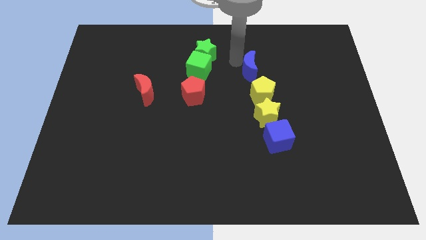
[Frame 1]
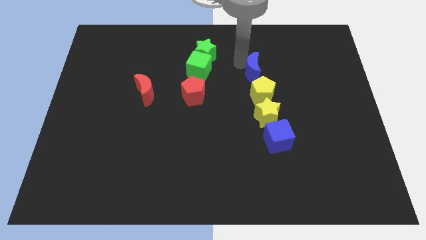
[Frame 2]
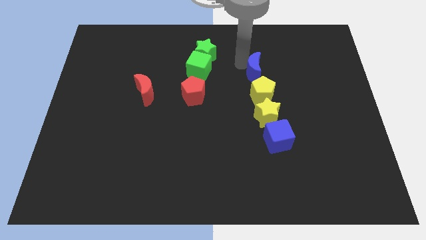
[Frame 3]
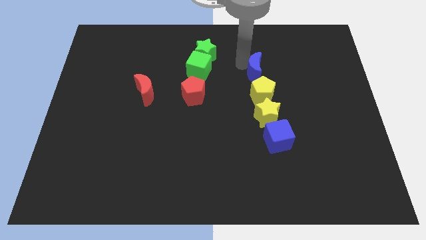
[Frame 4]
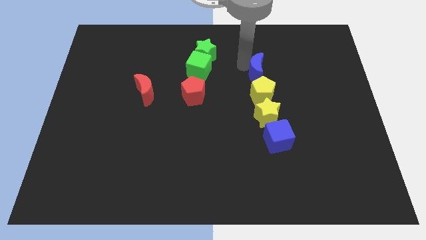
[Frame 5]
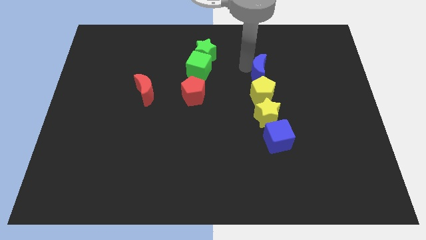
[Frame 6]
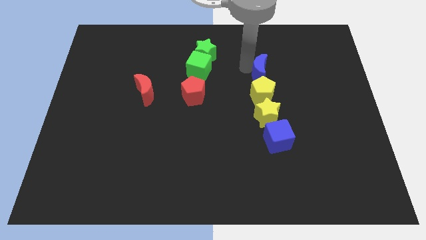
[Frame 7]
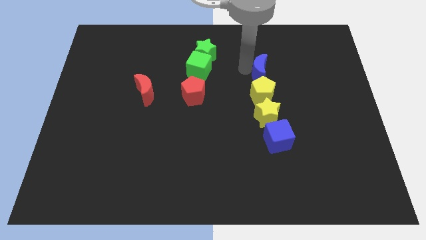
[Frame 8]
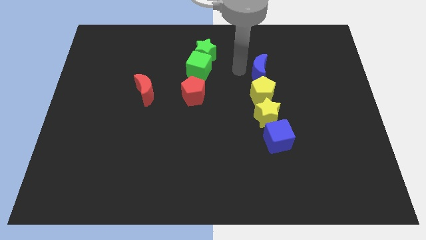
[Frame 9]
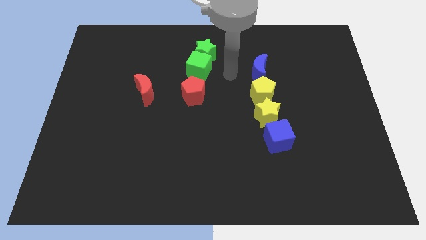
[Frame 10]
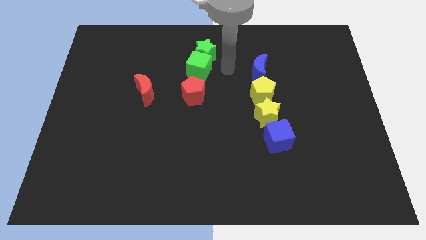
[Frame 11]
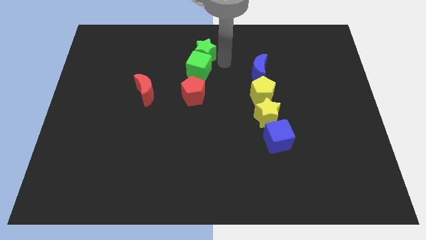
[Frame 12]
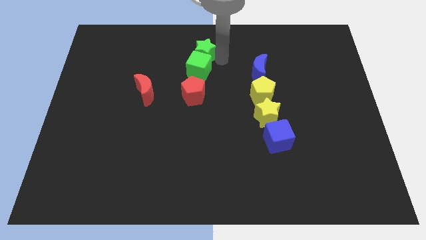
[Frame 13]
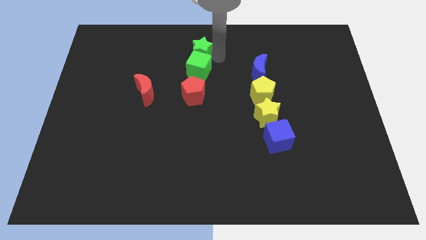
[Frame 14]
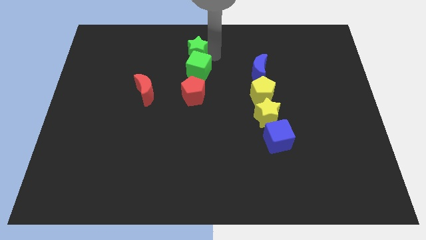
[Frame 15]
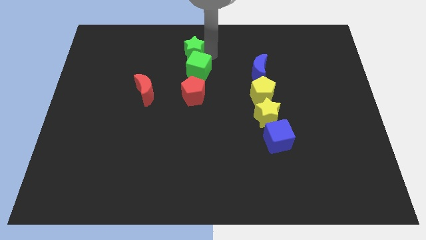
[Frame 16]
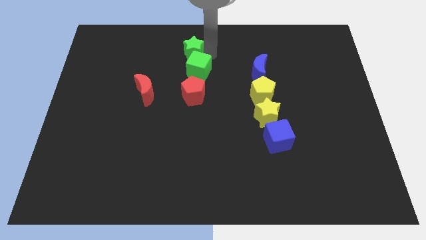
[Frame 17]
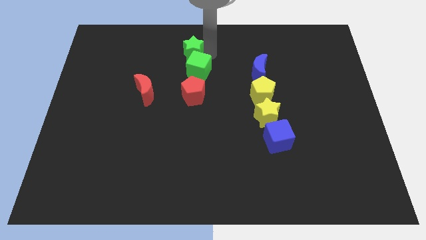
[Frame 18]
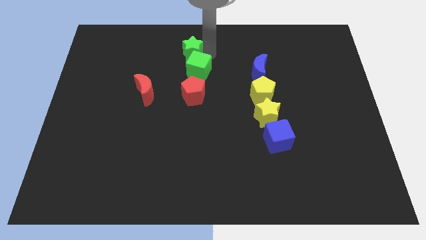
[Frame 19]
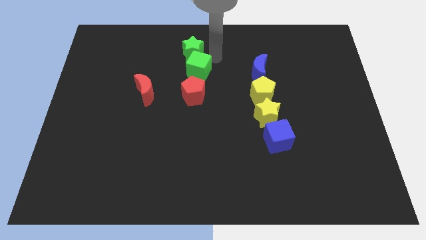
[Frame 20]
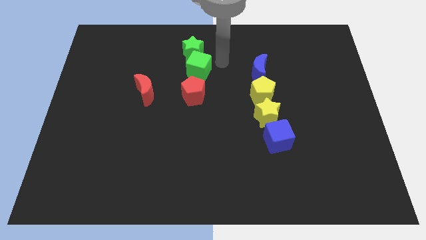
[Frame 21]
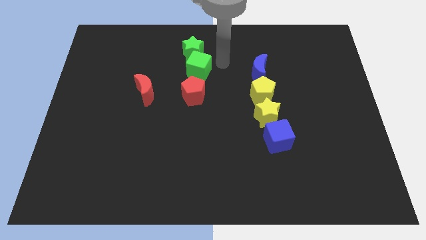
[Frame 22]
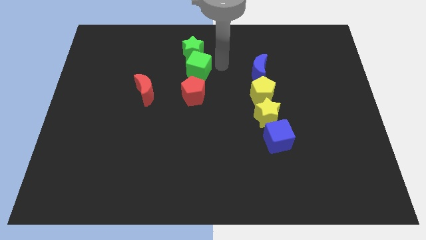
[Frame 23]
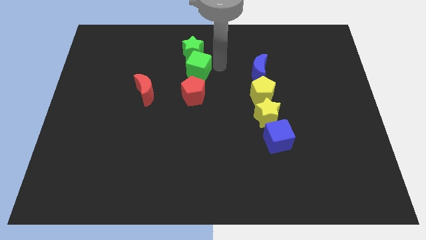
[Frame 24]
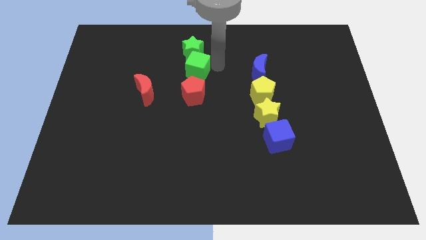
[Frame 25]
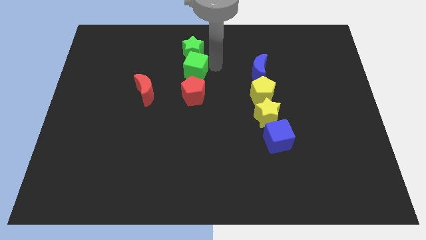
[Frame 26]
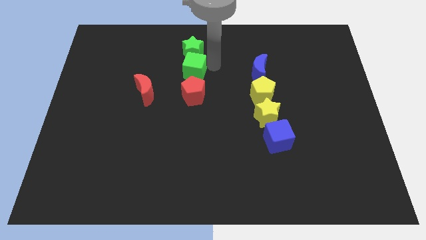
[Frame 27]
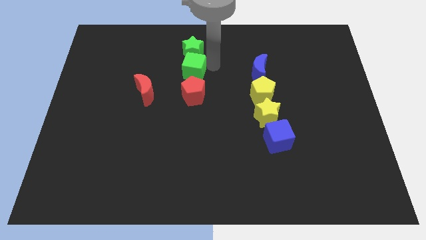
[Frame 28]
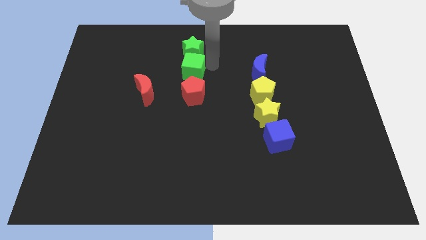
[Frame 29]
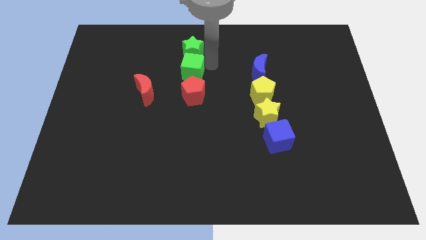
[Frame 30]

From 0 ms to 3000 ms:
move the green star and green cube towards left

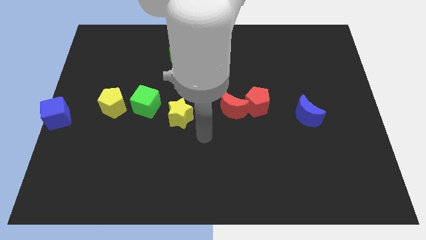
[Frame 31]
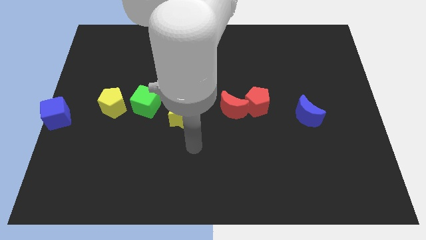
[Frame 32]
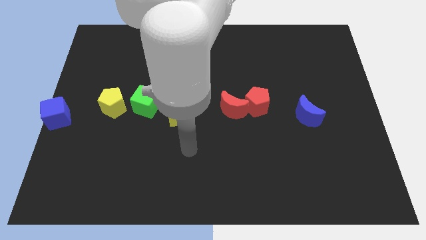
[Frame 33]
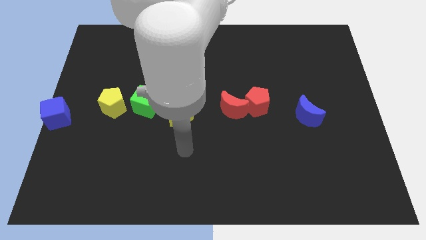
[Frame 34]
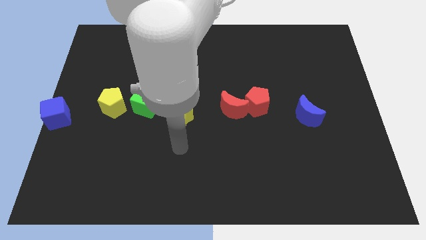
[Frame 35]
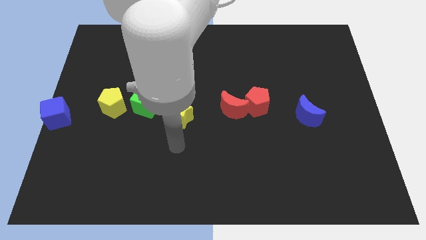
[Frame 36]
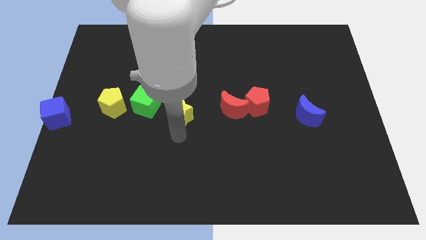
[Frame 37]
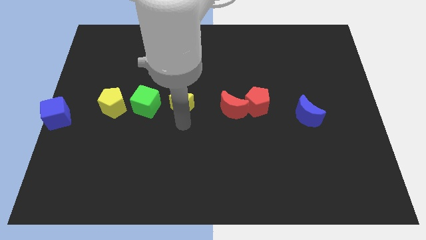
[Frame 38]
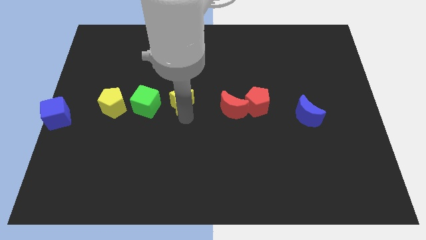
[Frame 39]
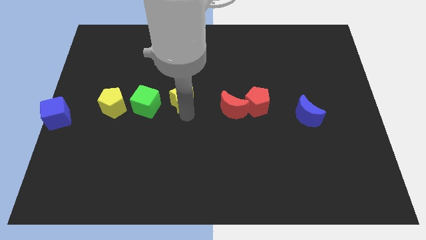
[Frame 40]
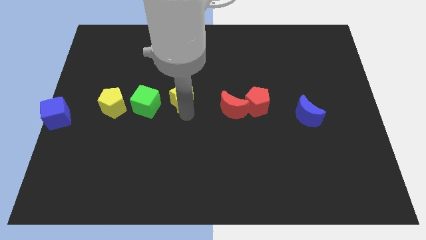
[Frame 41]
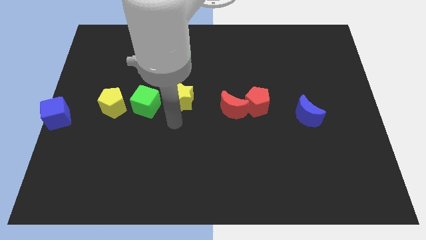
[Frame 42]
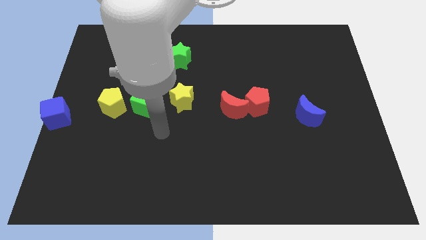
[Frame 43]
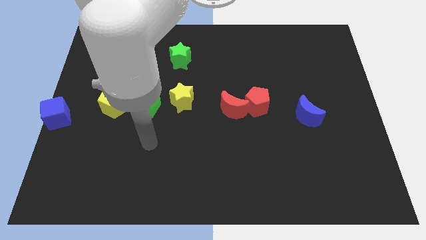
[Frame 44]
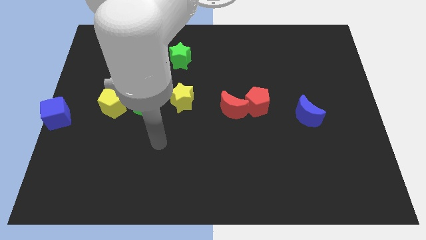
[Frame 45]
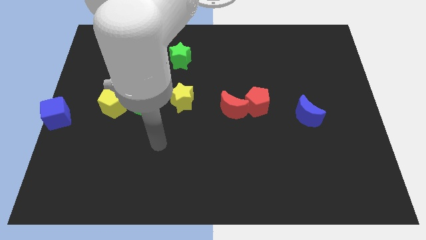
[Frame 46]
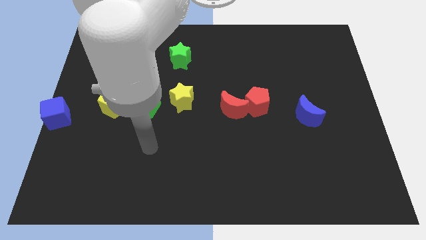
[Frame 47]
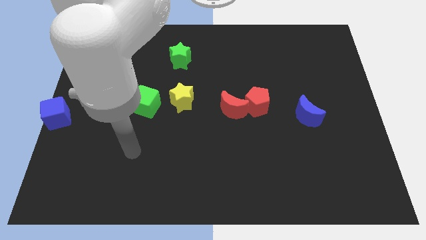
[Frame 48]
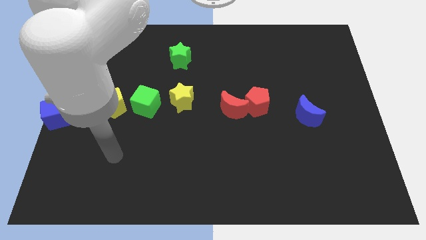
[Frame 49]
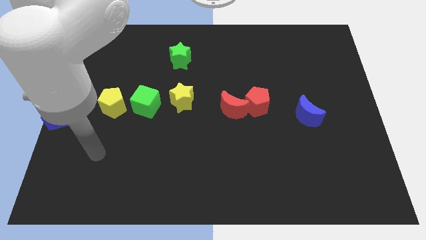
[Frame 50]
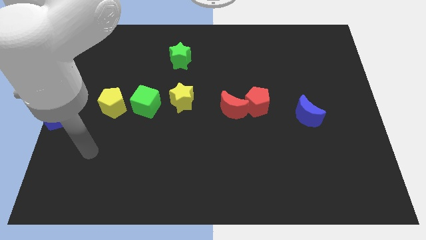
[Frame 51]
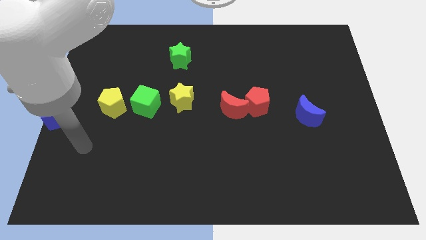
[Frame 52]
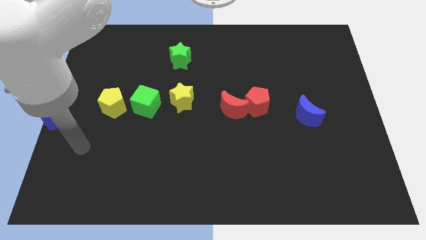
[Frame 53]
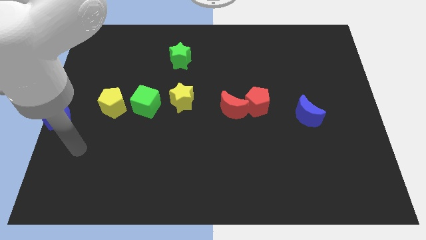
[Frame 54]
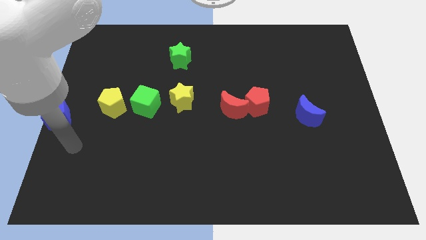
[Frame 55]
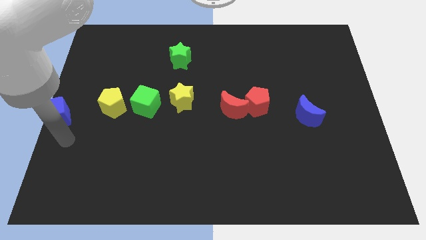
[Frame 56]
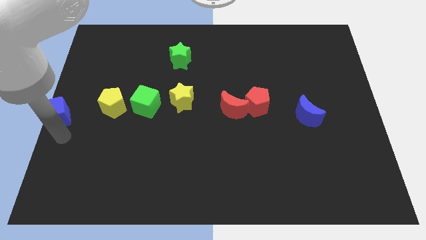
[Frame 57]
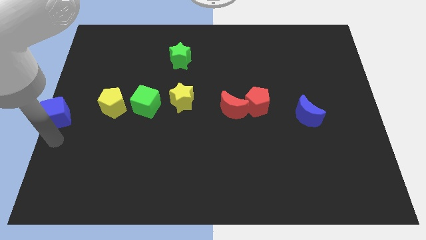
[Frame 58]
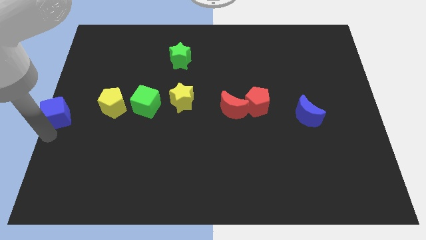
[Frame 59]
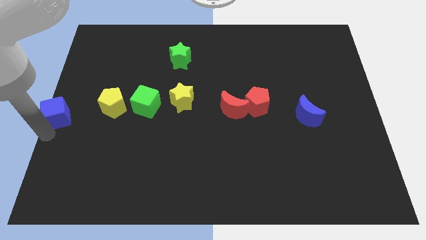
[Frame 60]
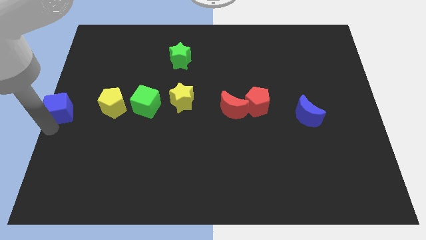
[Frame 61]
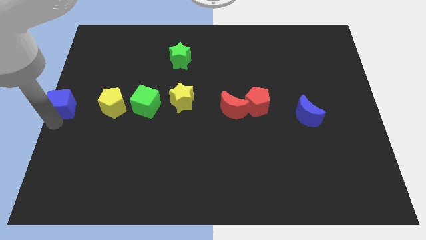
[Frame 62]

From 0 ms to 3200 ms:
move the yellow star to the right of the green cube

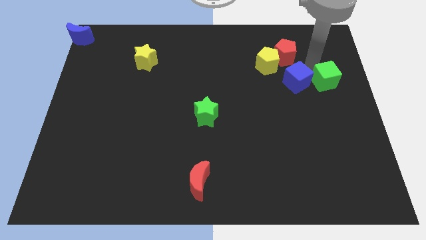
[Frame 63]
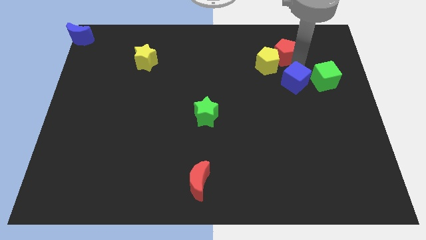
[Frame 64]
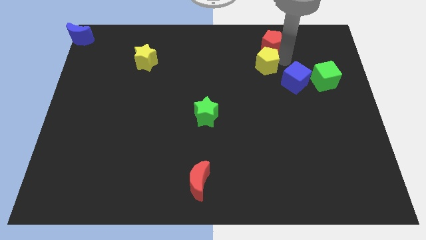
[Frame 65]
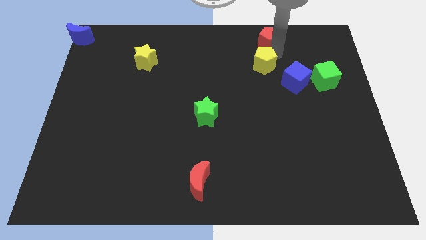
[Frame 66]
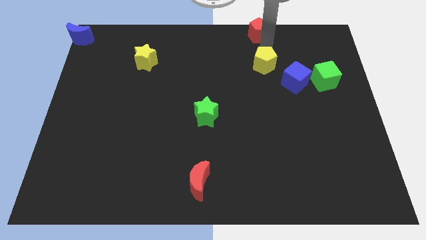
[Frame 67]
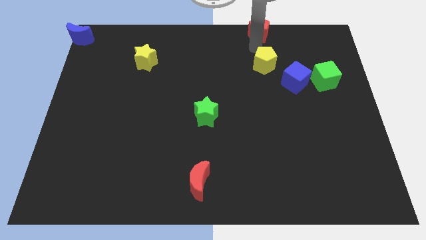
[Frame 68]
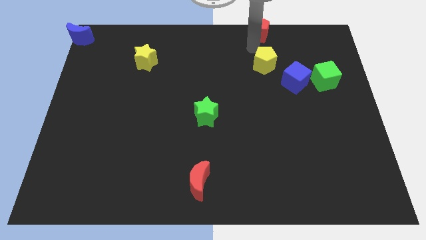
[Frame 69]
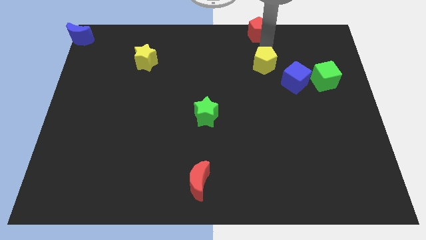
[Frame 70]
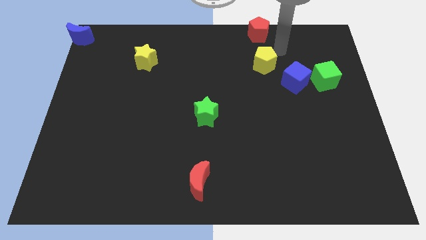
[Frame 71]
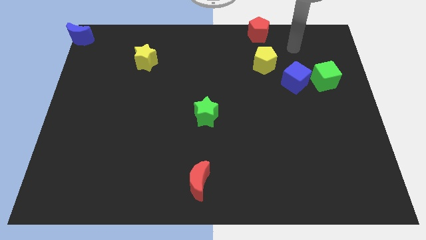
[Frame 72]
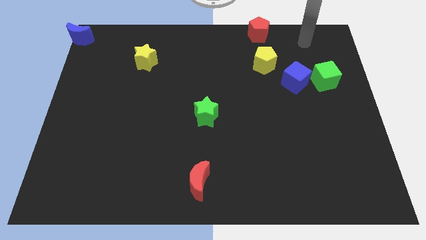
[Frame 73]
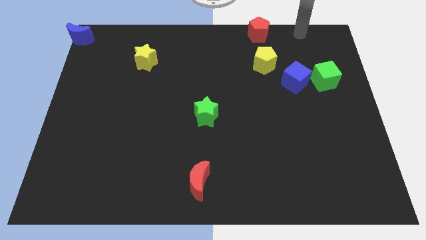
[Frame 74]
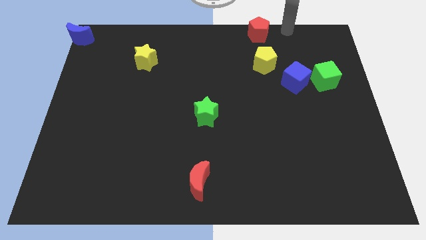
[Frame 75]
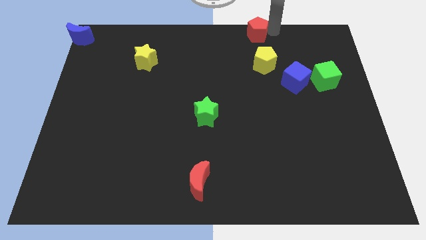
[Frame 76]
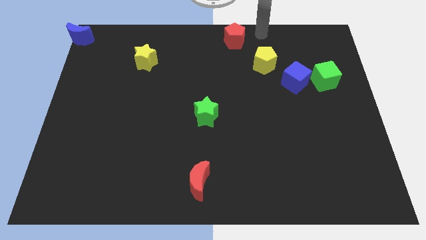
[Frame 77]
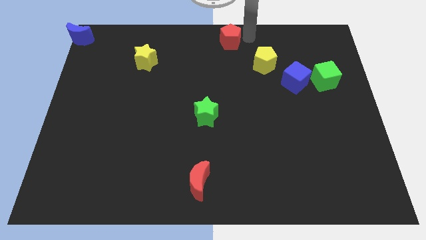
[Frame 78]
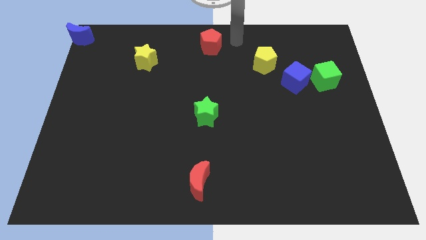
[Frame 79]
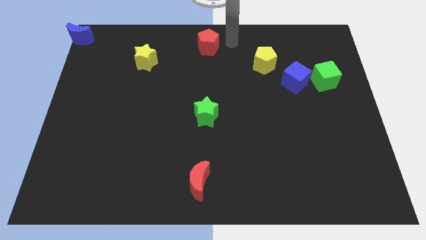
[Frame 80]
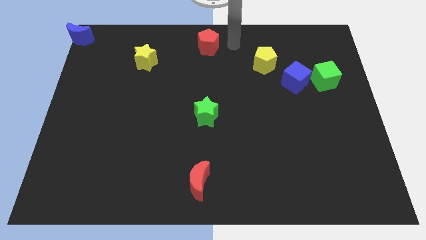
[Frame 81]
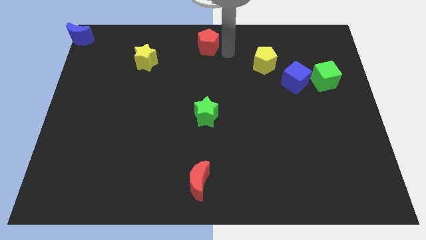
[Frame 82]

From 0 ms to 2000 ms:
push the red pentagon to the top center

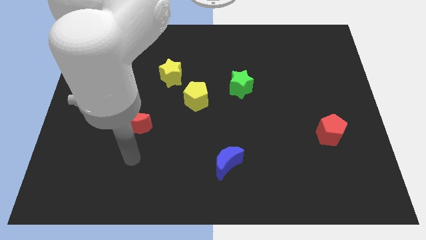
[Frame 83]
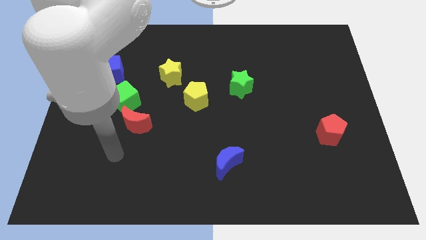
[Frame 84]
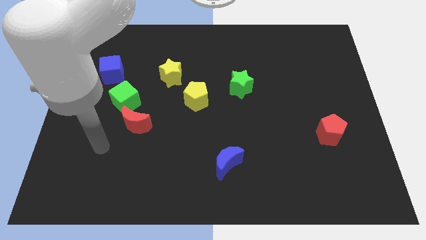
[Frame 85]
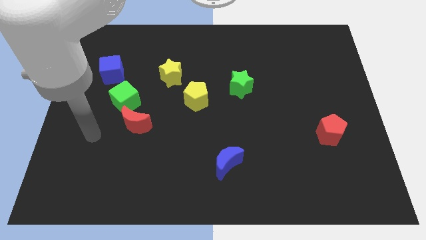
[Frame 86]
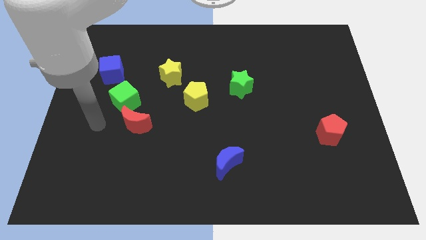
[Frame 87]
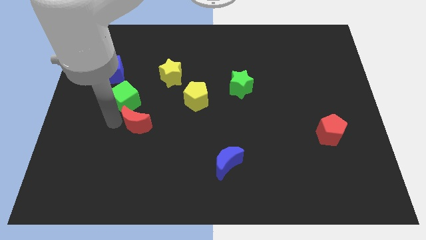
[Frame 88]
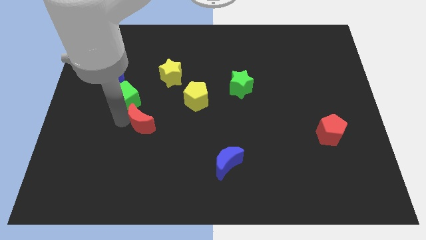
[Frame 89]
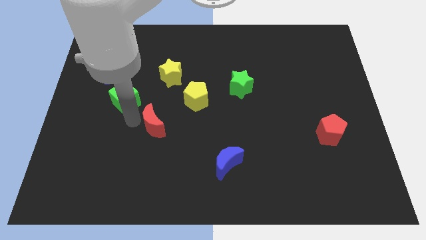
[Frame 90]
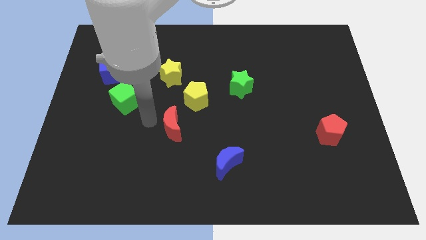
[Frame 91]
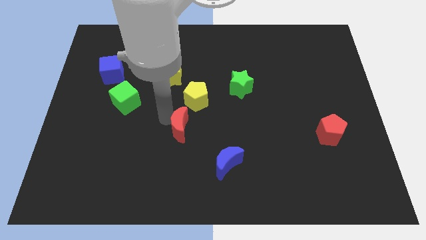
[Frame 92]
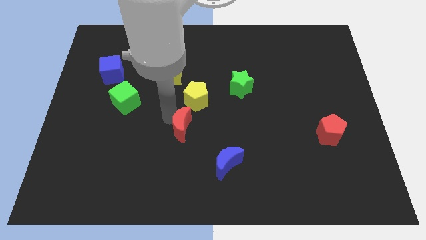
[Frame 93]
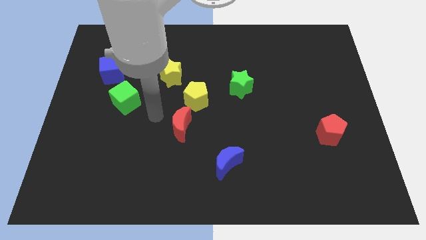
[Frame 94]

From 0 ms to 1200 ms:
move the red crescent to the bottom of the yellow pentagon
